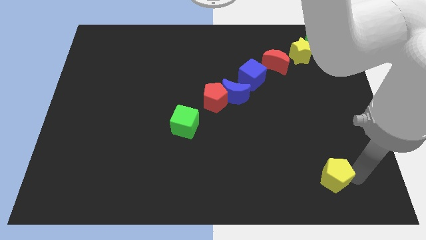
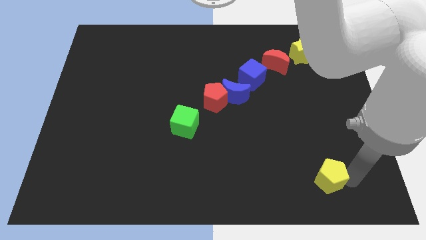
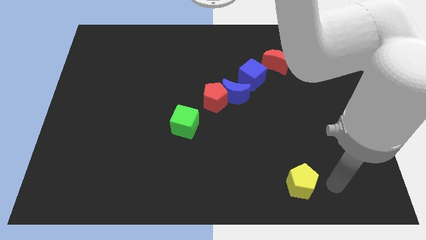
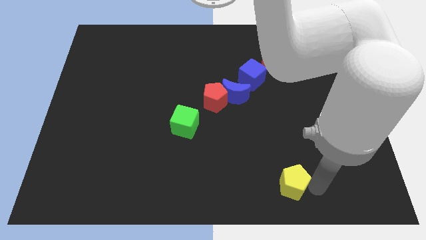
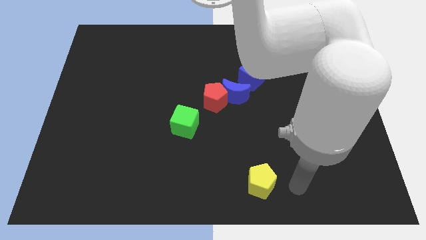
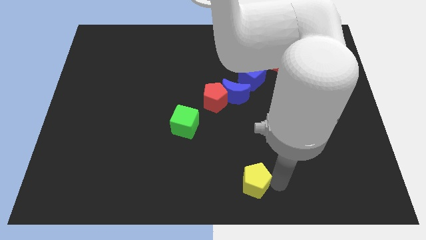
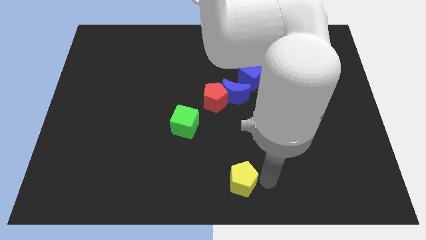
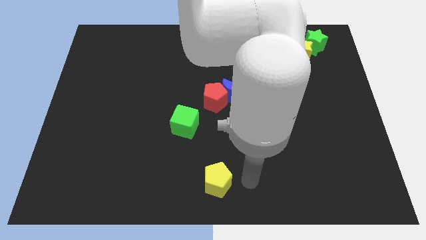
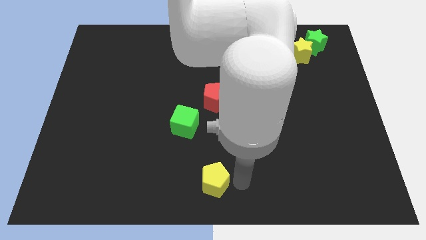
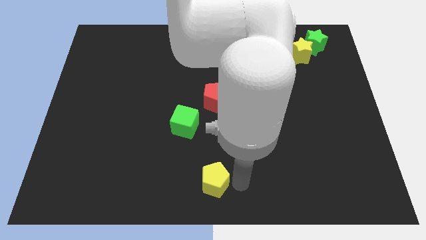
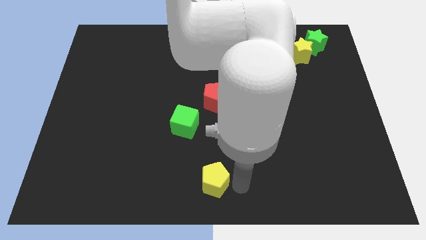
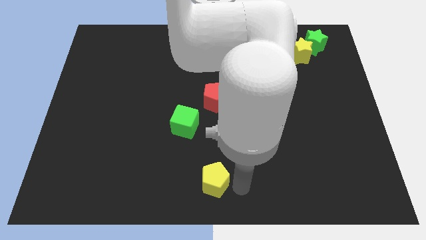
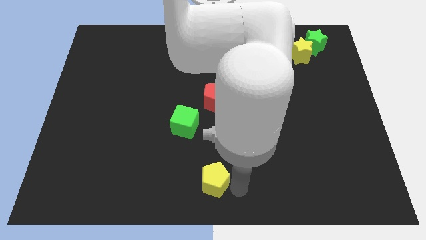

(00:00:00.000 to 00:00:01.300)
put the yellow pentagon at the bottom center

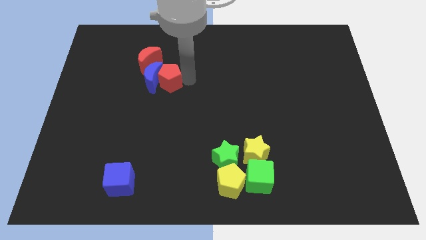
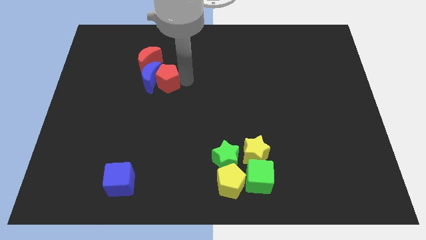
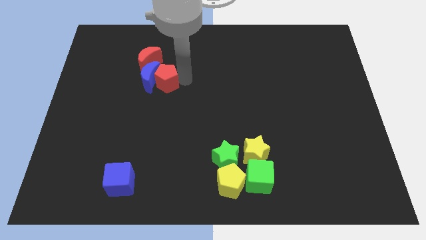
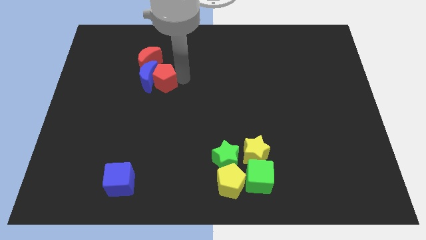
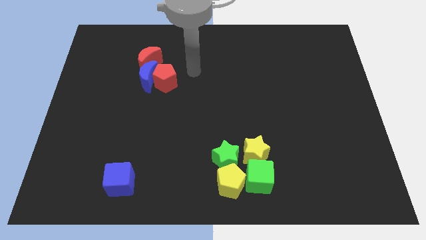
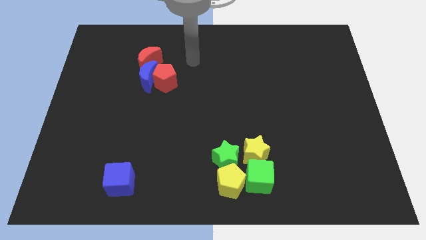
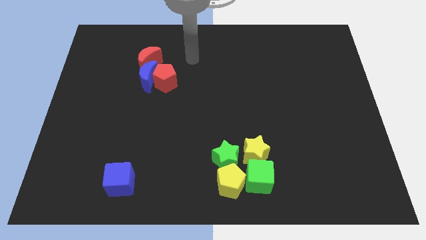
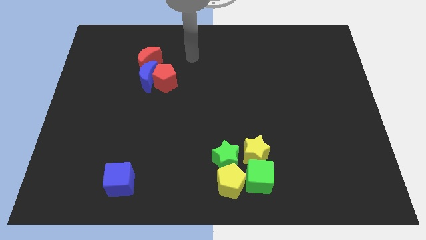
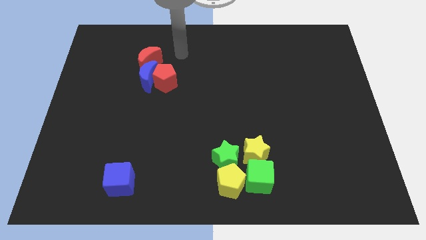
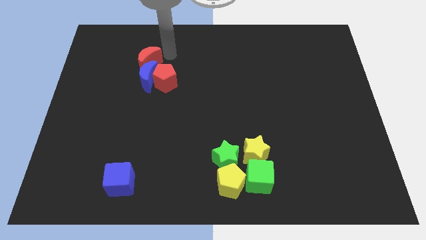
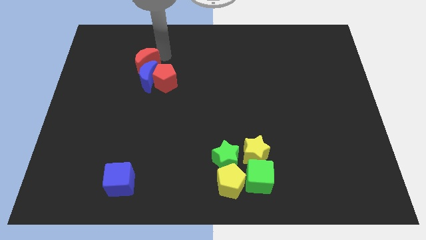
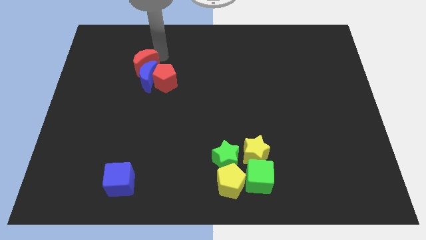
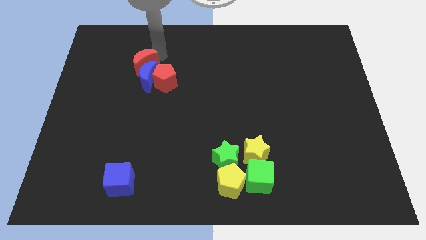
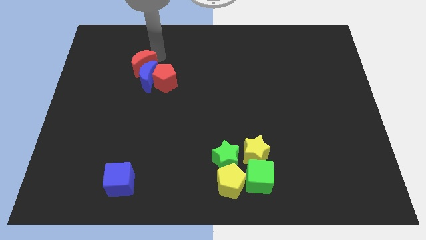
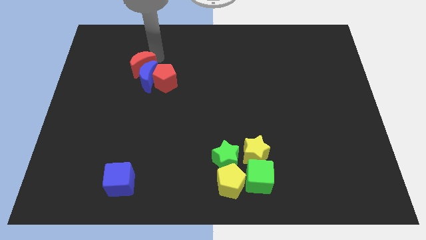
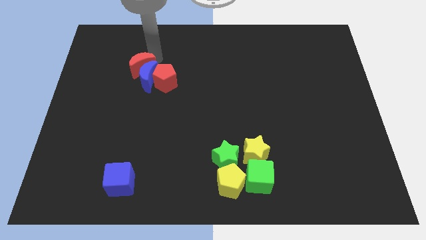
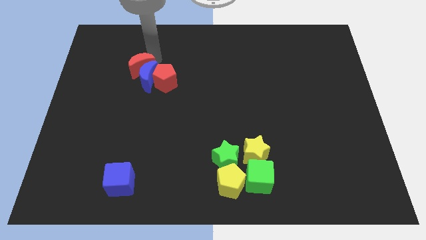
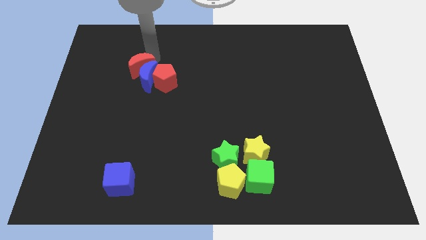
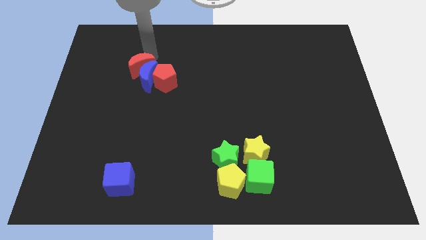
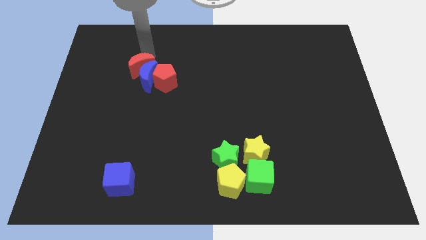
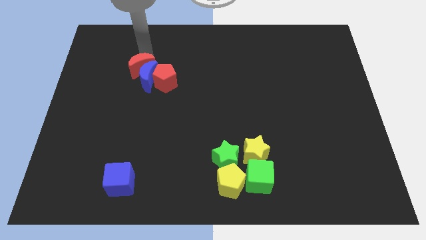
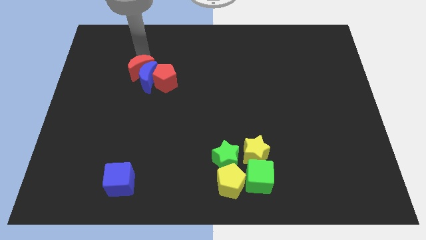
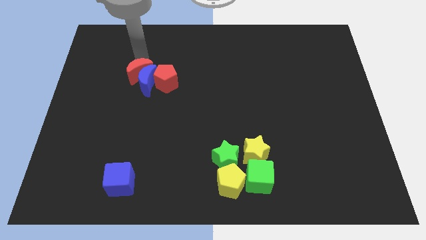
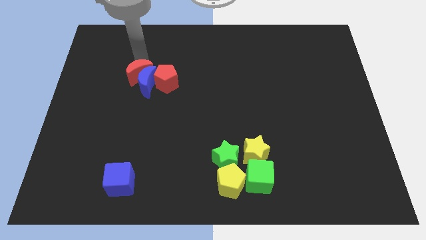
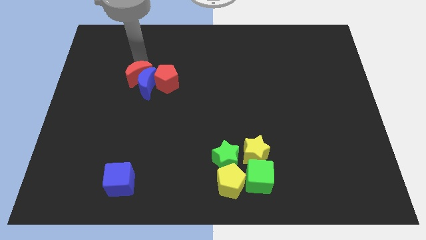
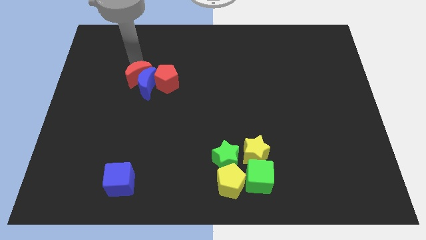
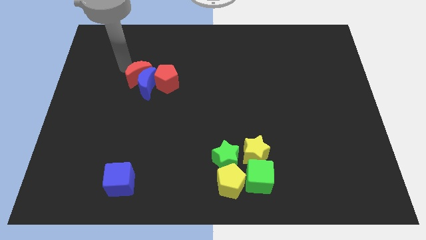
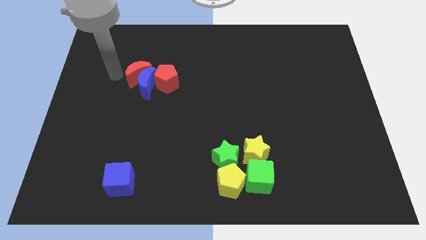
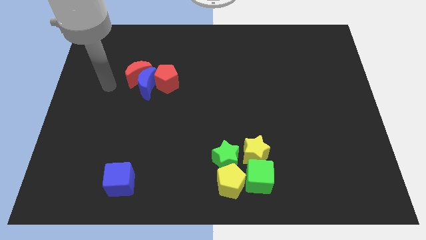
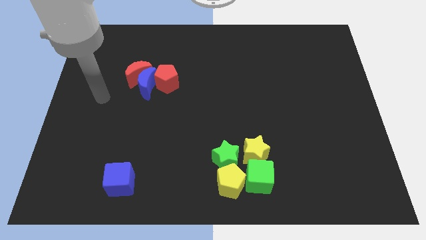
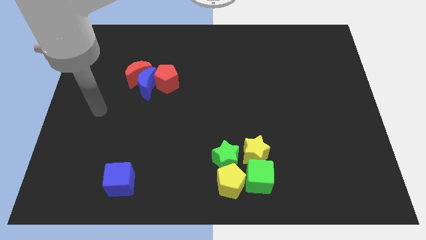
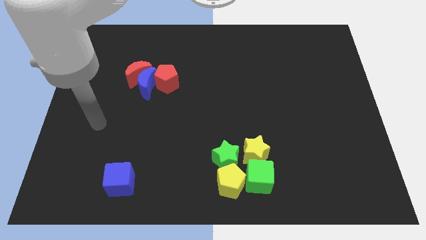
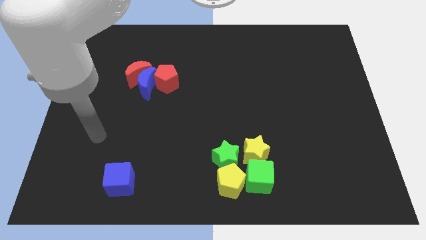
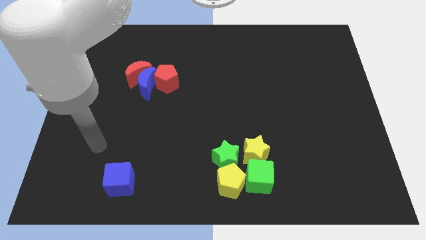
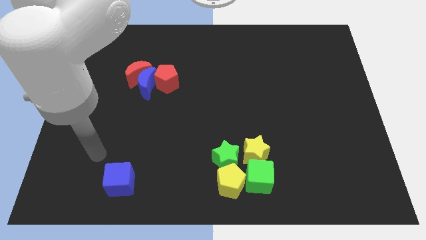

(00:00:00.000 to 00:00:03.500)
push the red crescent blue crescent and red pentagon slightly to the bottom side of the board

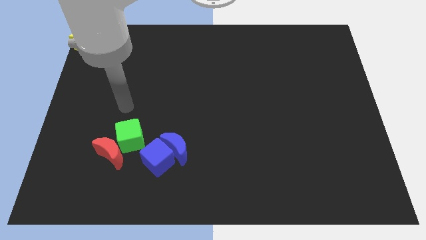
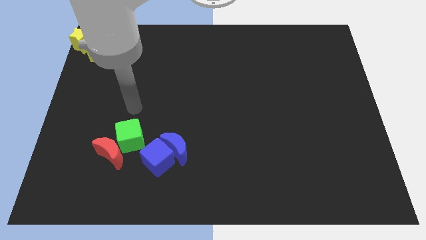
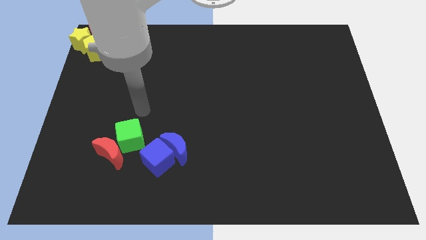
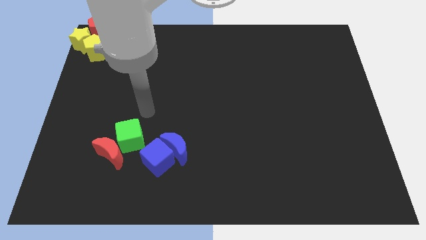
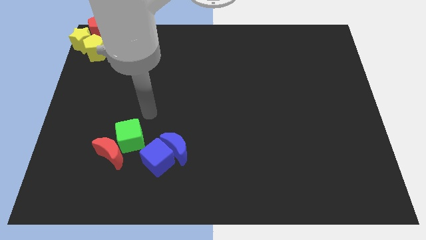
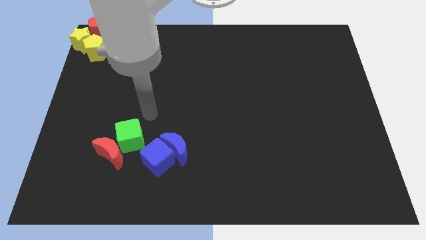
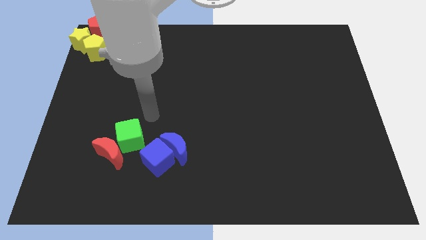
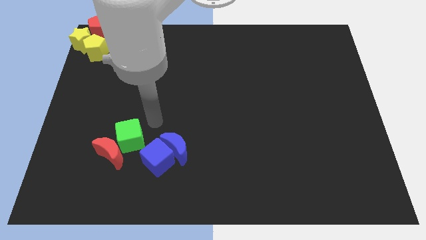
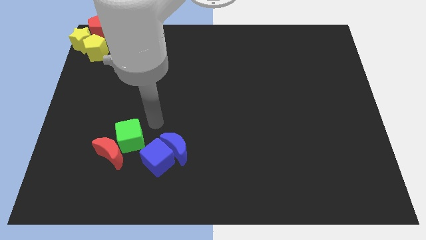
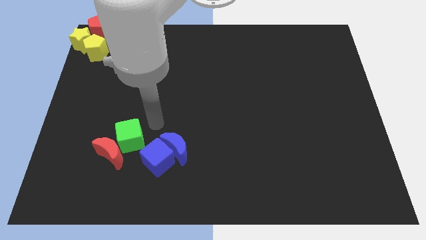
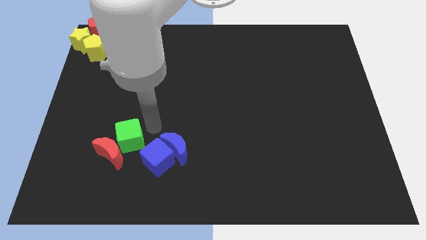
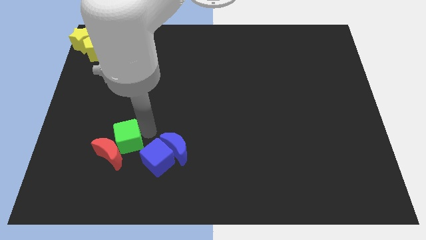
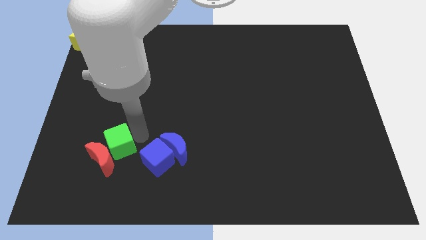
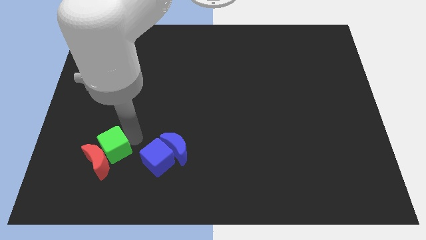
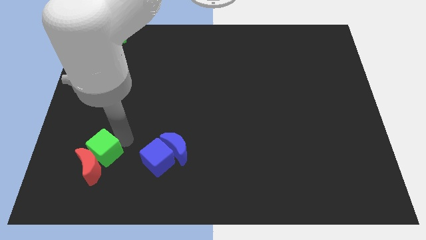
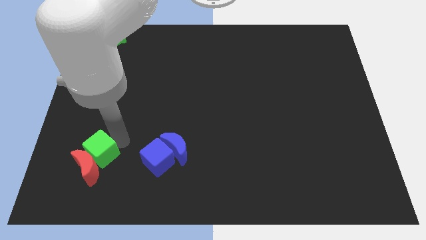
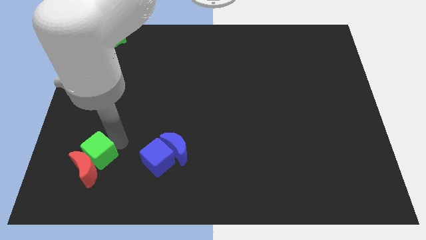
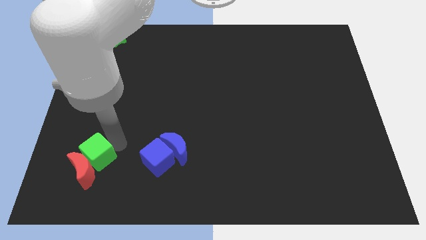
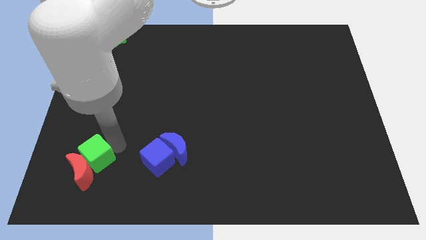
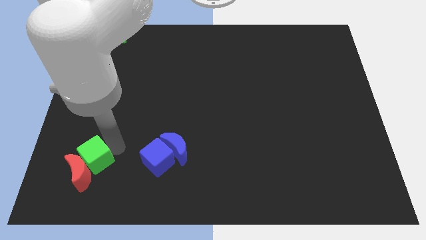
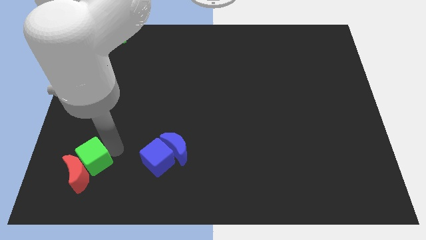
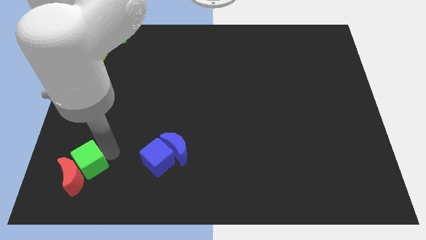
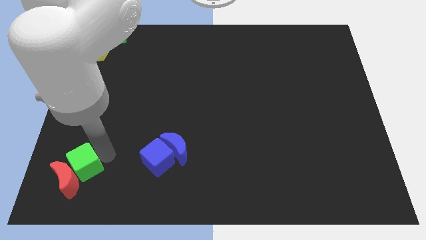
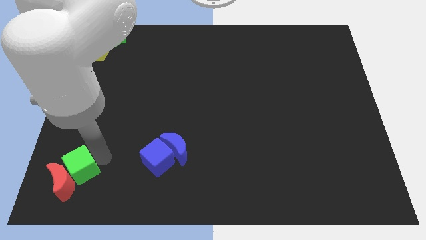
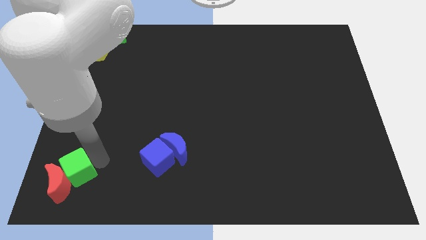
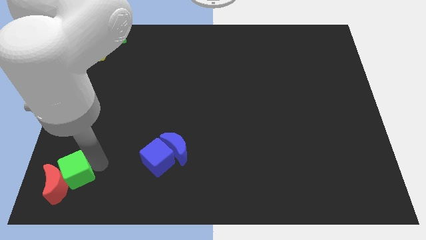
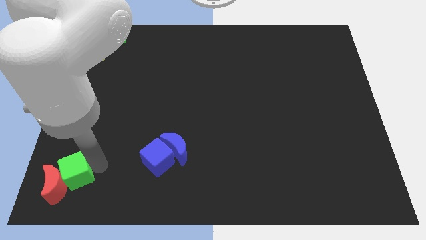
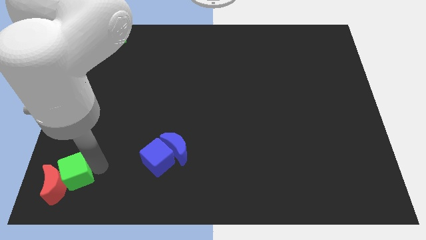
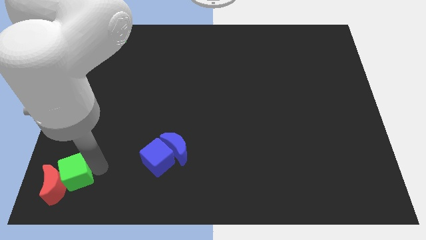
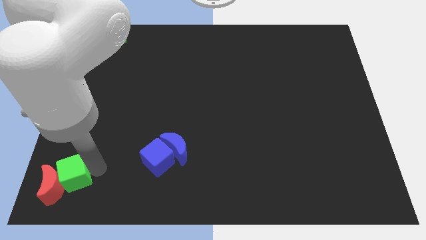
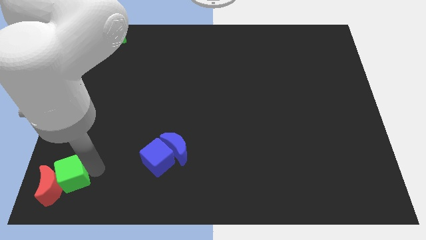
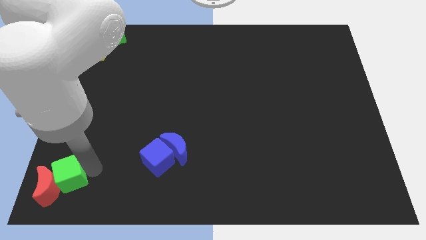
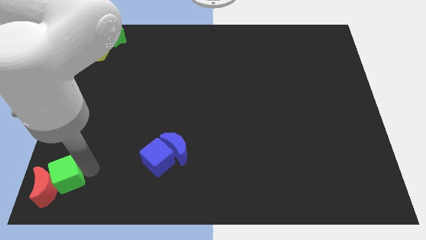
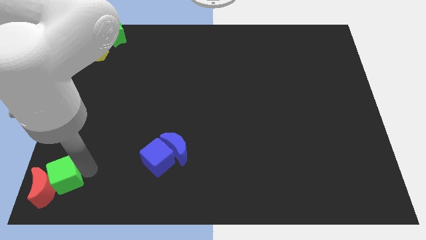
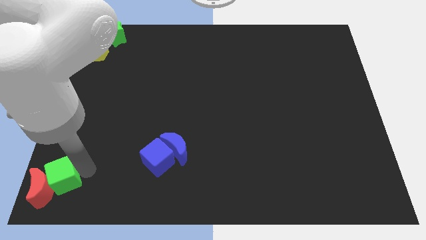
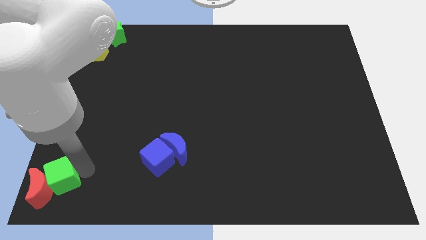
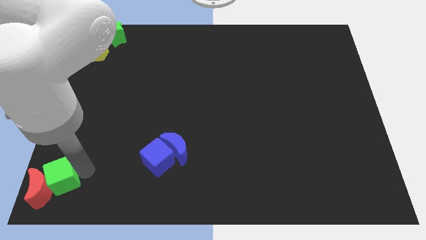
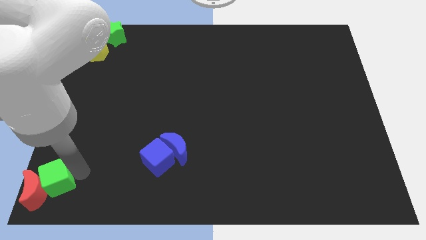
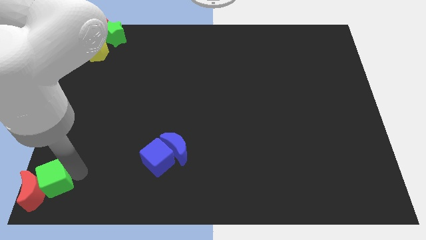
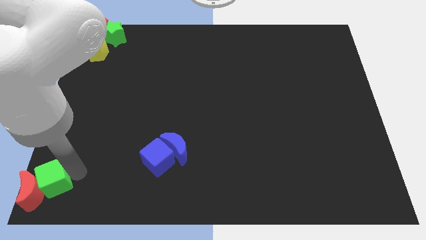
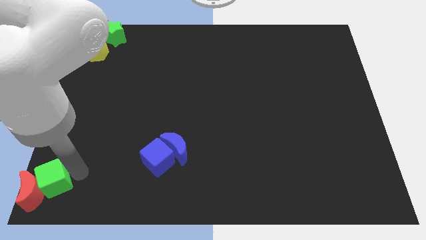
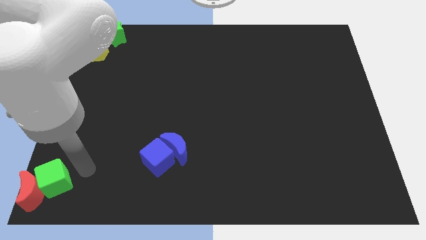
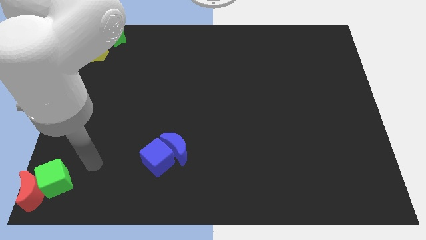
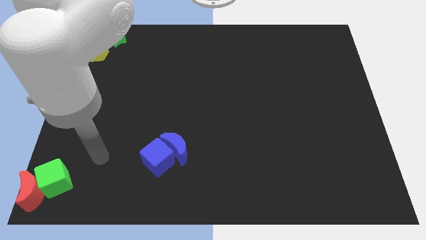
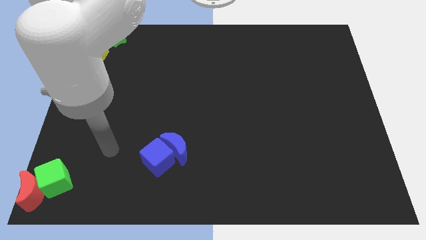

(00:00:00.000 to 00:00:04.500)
place the green cube along with red crescent at bottom left corner of the board
